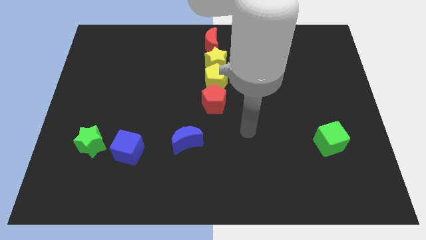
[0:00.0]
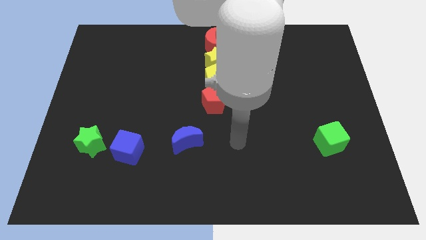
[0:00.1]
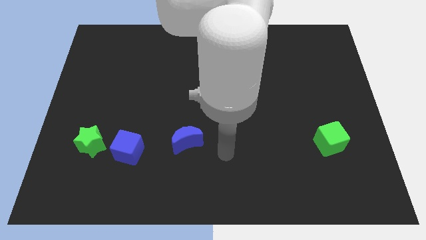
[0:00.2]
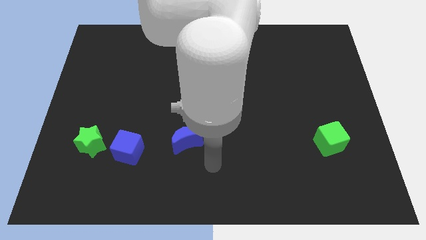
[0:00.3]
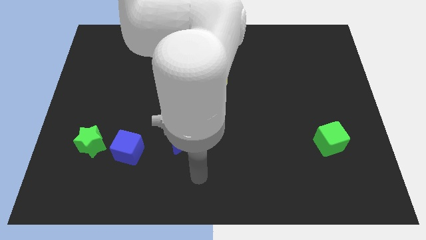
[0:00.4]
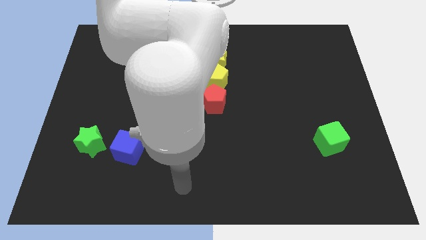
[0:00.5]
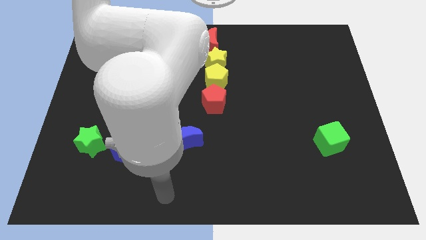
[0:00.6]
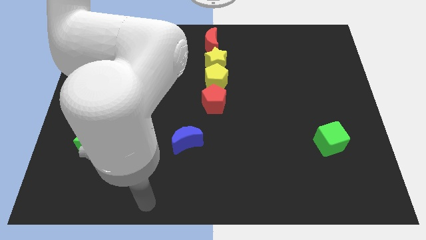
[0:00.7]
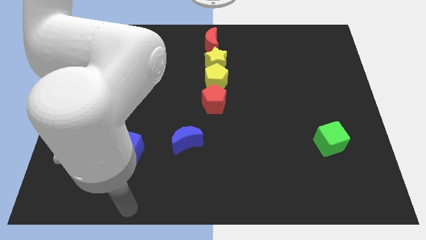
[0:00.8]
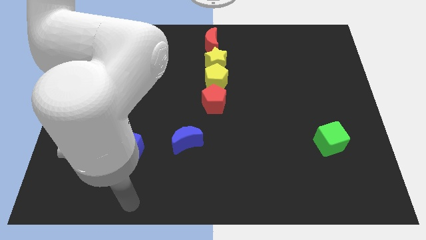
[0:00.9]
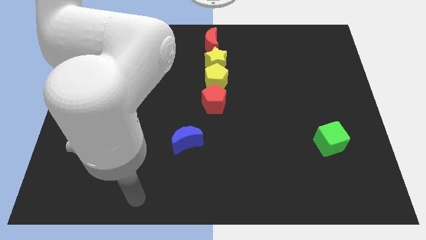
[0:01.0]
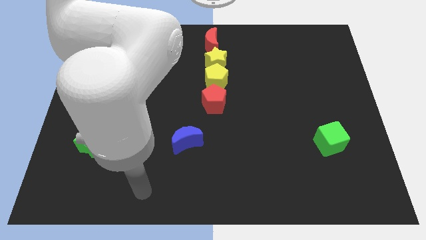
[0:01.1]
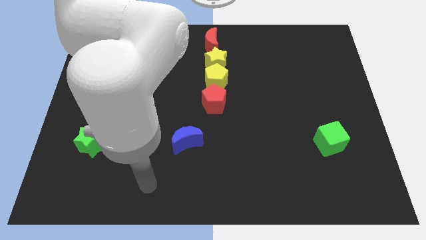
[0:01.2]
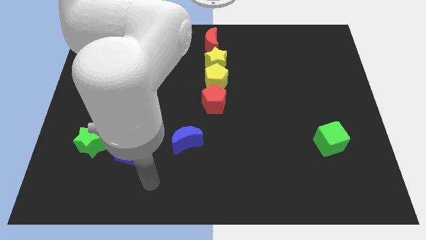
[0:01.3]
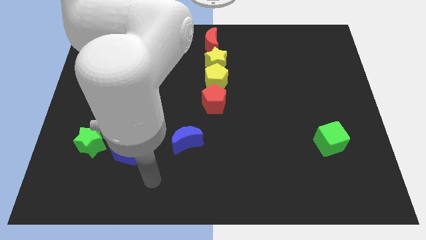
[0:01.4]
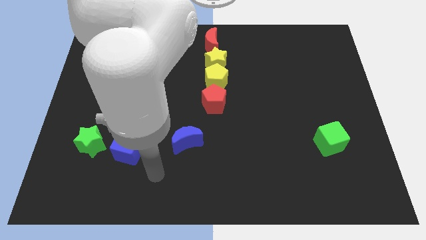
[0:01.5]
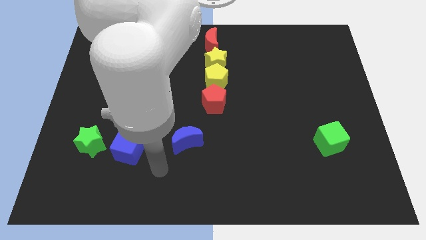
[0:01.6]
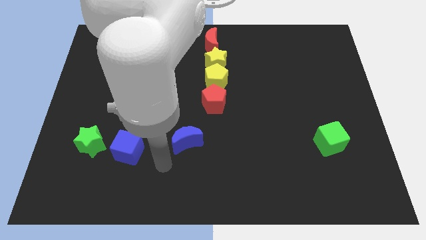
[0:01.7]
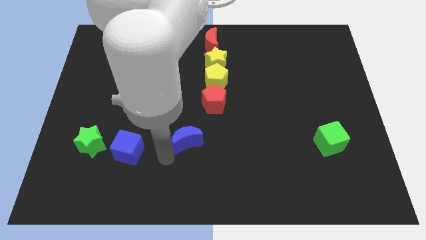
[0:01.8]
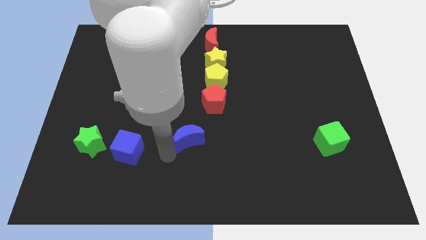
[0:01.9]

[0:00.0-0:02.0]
point your arm to the bottom left side of the blue crescent

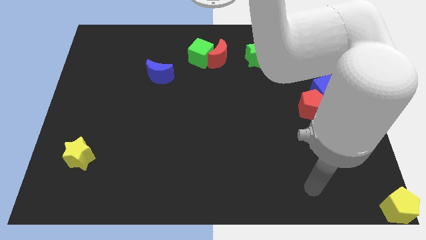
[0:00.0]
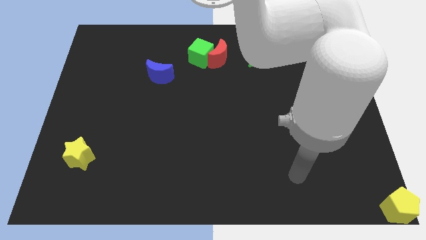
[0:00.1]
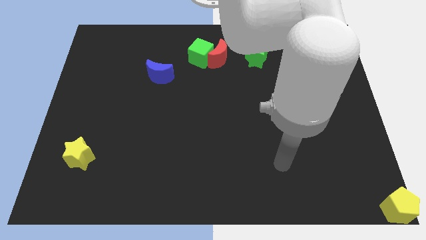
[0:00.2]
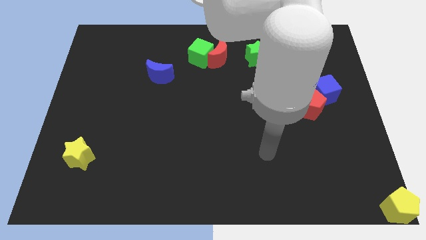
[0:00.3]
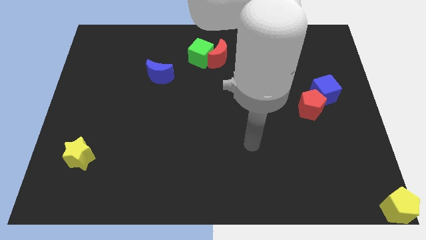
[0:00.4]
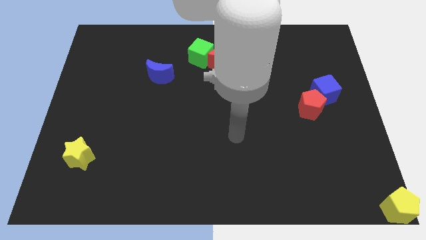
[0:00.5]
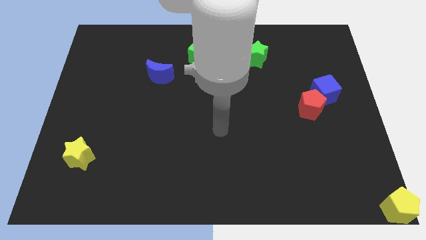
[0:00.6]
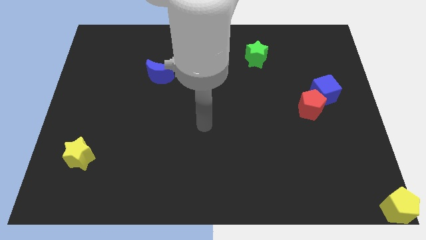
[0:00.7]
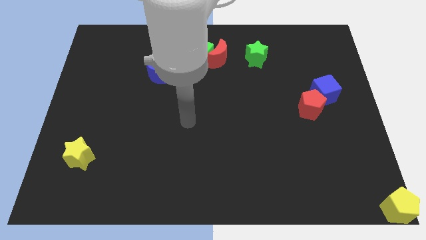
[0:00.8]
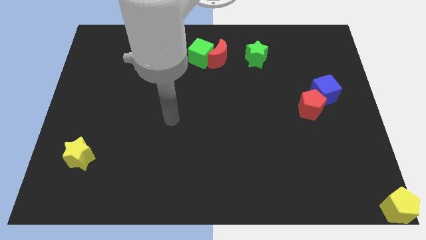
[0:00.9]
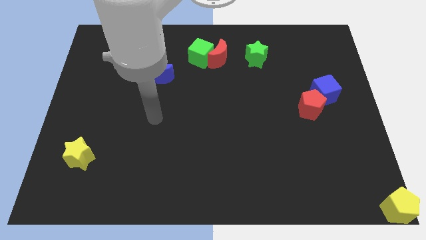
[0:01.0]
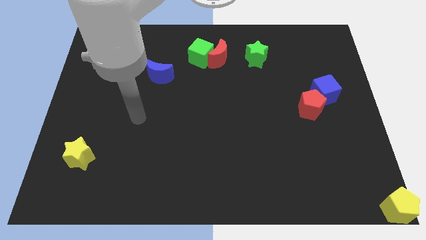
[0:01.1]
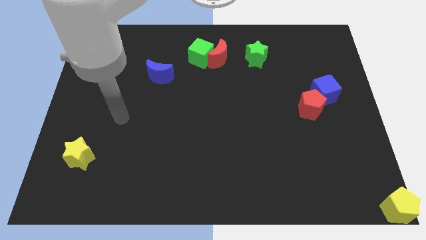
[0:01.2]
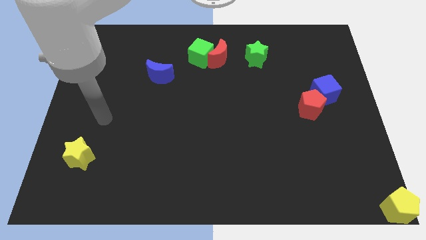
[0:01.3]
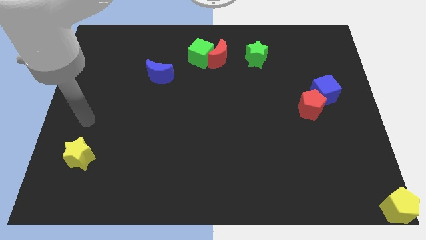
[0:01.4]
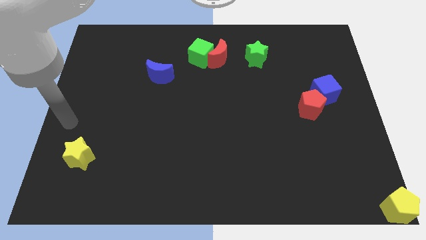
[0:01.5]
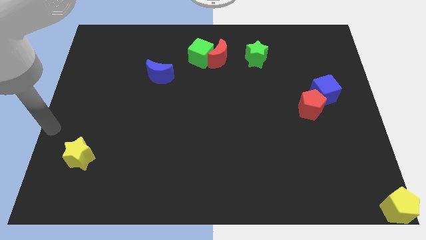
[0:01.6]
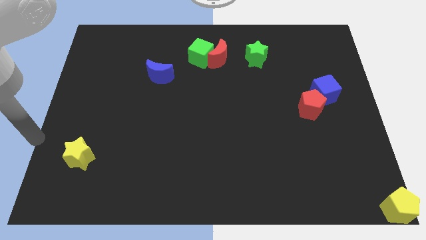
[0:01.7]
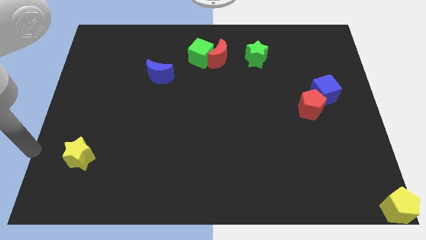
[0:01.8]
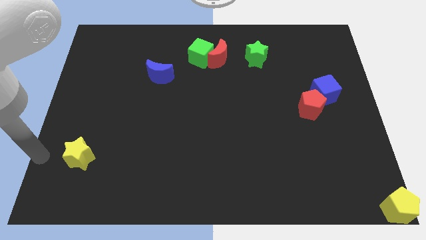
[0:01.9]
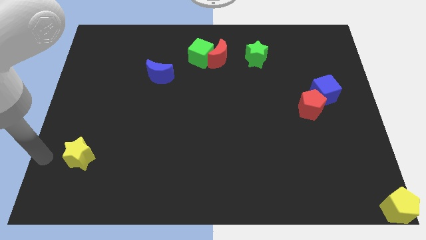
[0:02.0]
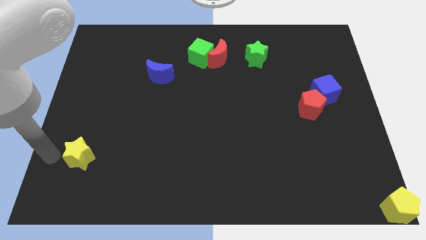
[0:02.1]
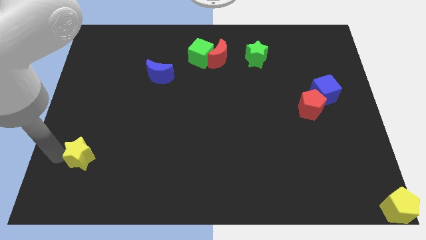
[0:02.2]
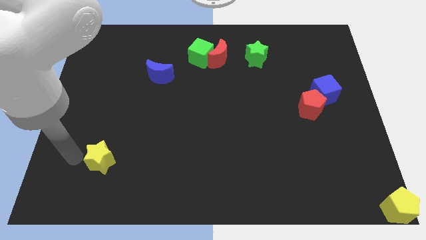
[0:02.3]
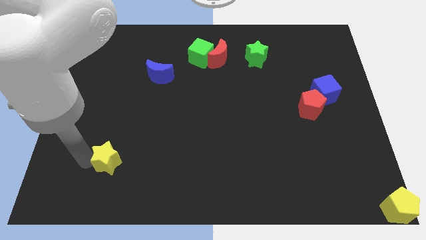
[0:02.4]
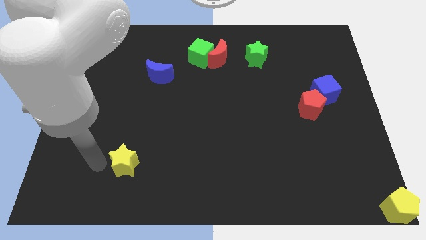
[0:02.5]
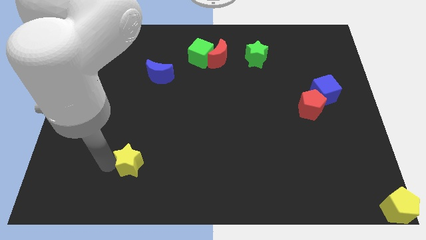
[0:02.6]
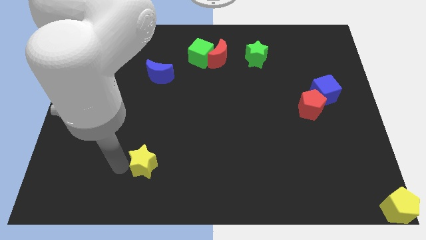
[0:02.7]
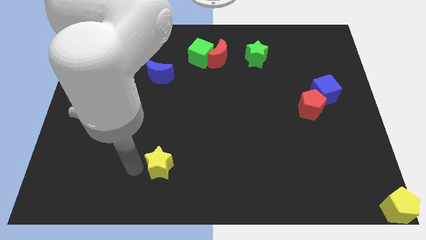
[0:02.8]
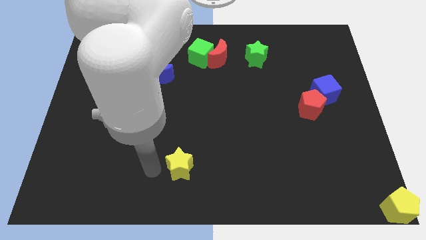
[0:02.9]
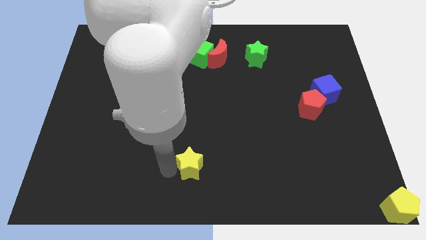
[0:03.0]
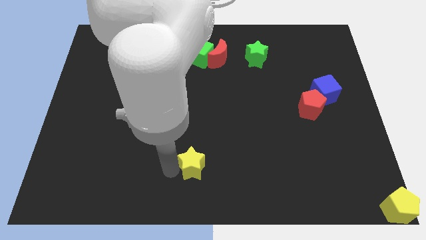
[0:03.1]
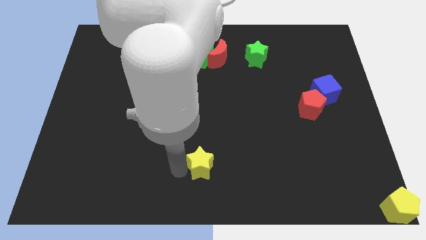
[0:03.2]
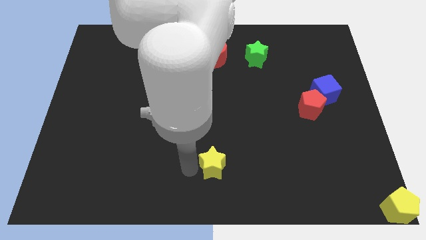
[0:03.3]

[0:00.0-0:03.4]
move the yellow star to bottom center

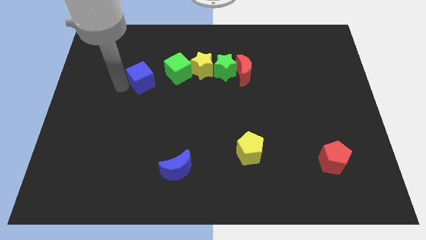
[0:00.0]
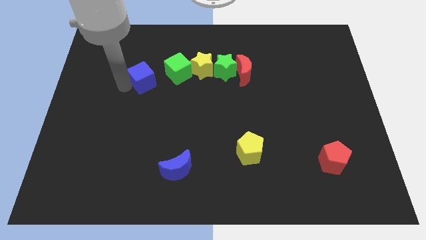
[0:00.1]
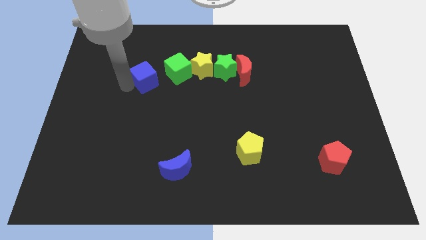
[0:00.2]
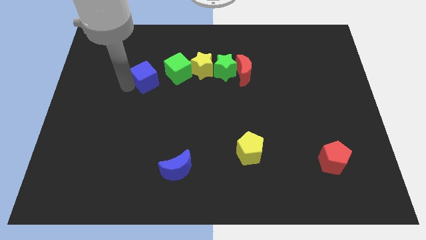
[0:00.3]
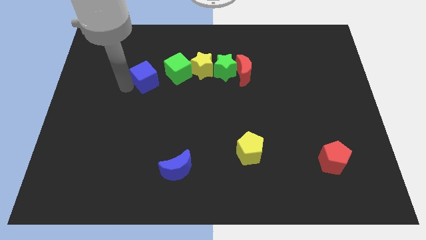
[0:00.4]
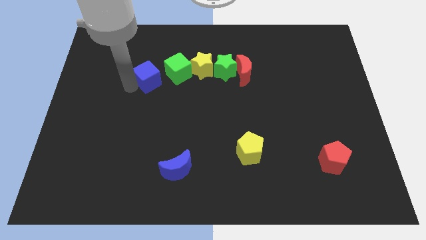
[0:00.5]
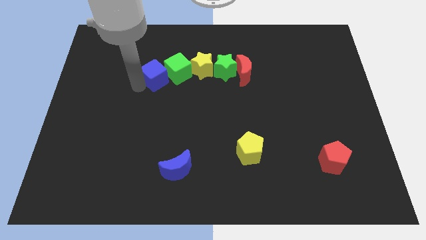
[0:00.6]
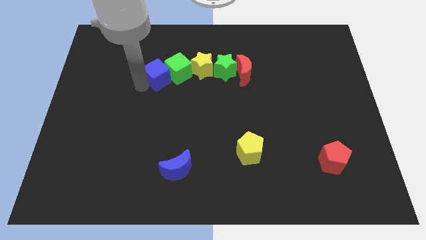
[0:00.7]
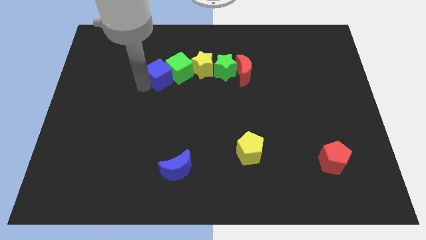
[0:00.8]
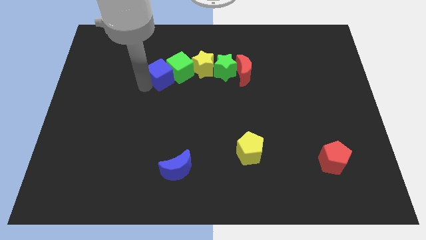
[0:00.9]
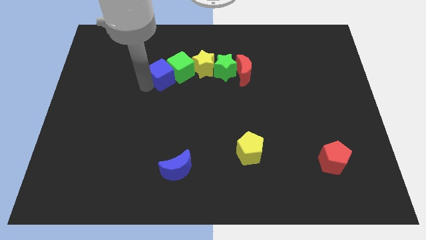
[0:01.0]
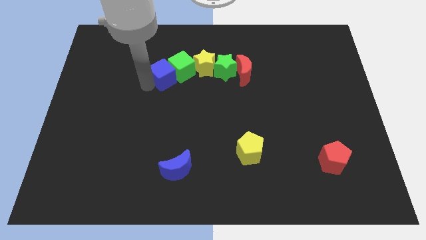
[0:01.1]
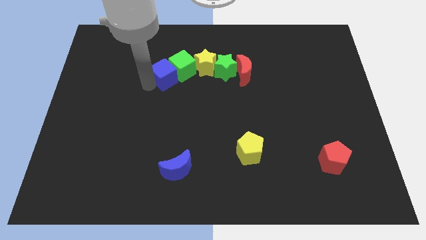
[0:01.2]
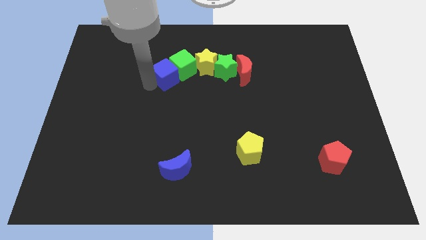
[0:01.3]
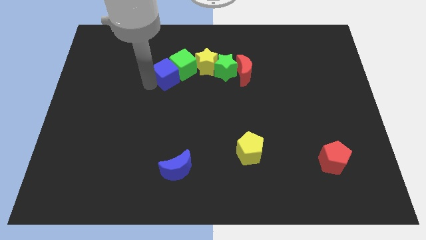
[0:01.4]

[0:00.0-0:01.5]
push the blue cube to the left of the green cube

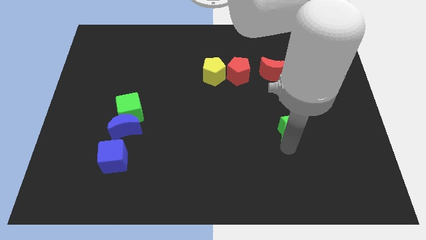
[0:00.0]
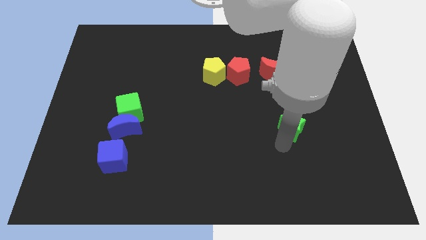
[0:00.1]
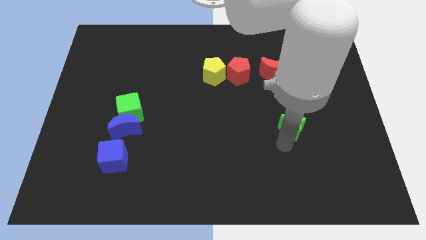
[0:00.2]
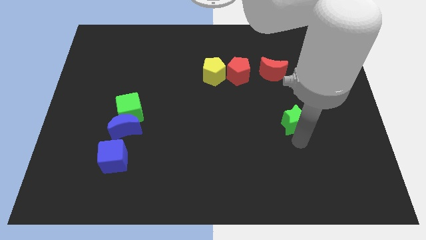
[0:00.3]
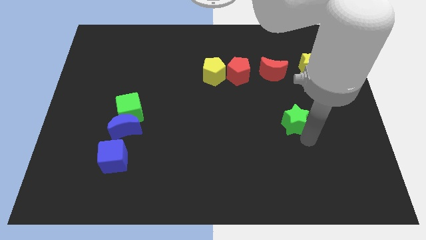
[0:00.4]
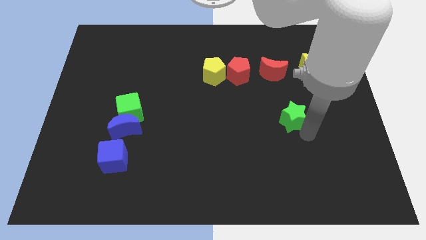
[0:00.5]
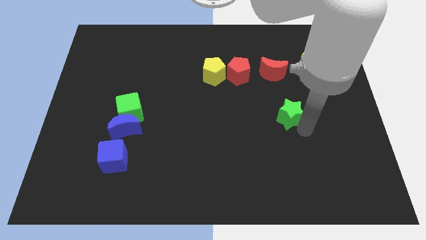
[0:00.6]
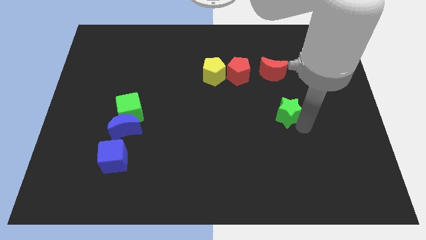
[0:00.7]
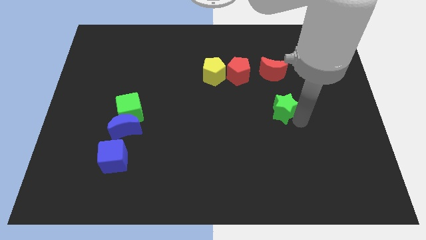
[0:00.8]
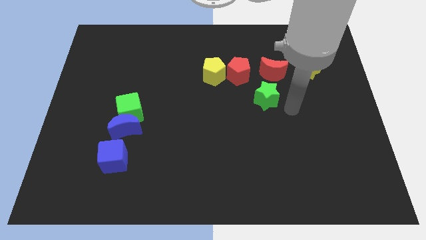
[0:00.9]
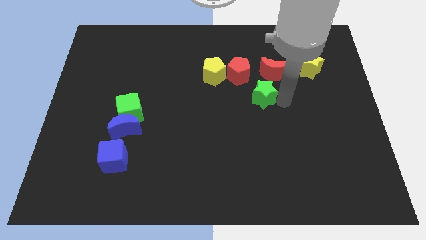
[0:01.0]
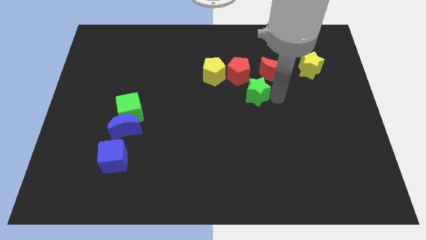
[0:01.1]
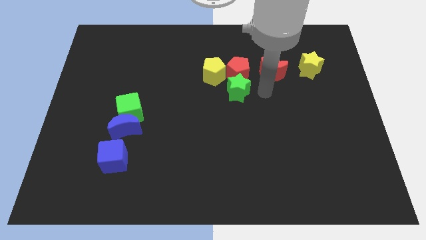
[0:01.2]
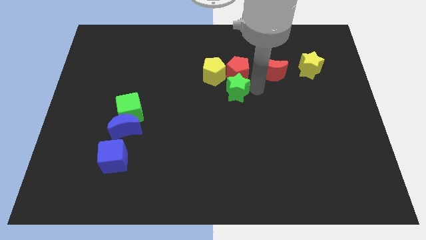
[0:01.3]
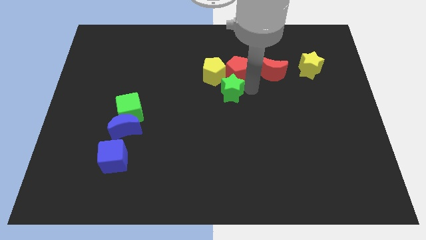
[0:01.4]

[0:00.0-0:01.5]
place the green star below to the red pentagon

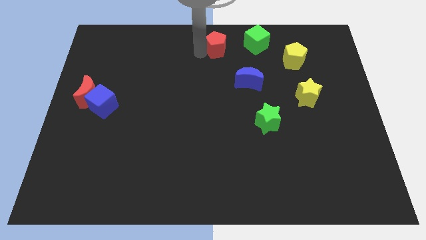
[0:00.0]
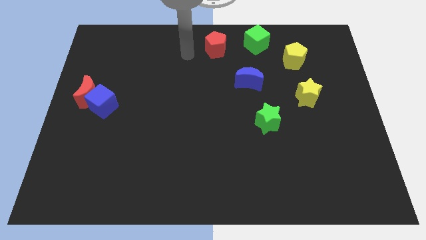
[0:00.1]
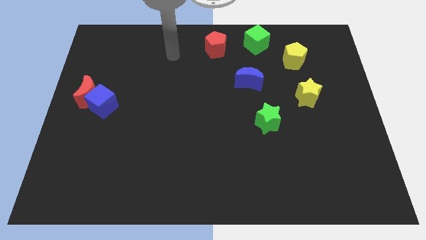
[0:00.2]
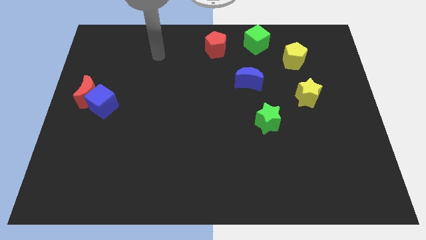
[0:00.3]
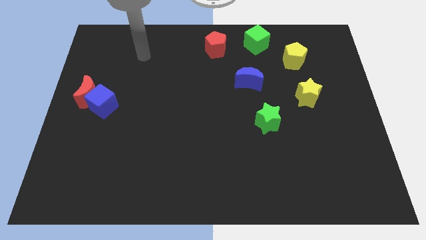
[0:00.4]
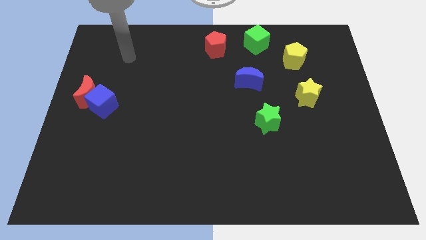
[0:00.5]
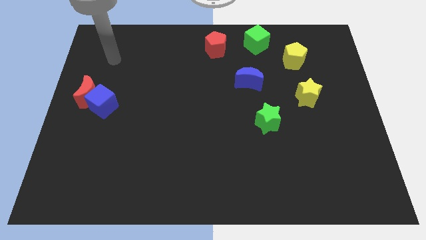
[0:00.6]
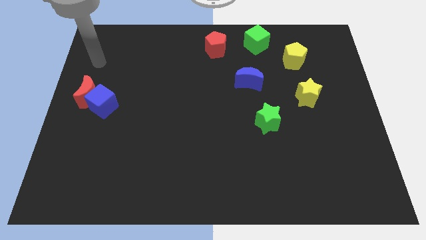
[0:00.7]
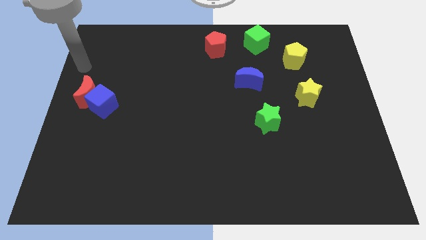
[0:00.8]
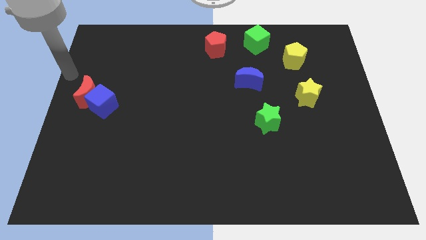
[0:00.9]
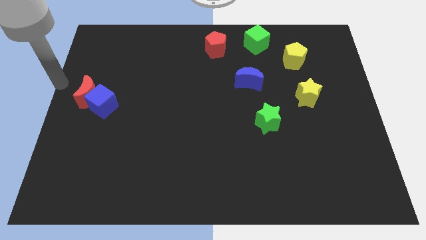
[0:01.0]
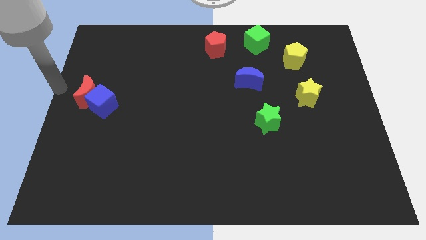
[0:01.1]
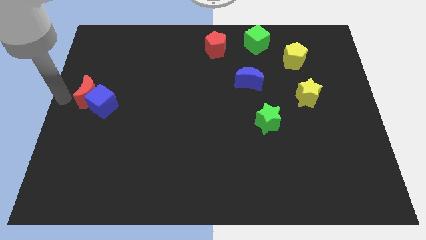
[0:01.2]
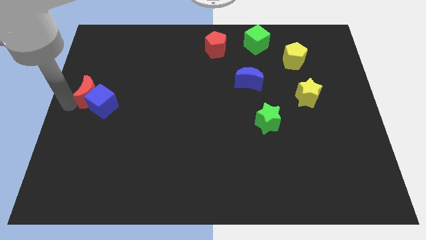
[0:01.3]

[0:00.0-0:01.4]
point your arm left to red moon
